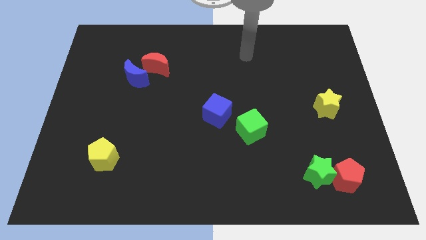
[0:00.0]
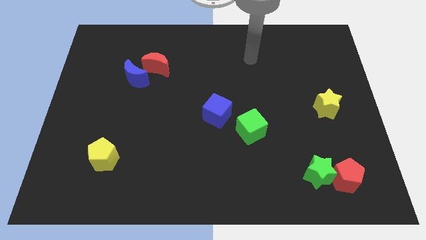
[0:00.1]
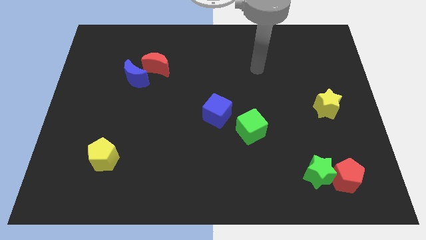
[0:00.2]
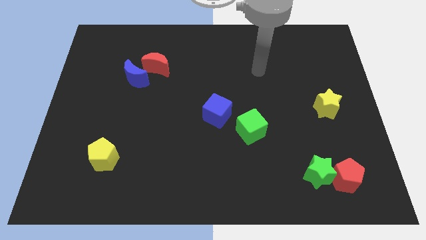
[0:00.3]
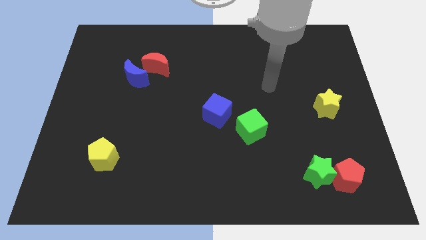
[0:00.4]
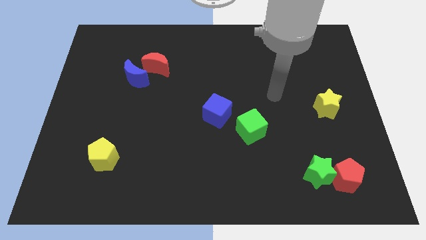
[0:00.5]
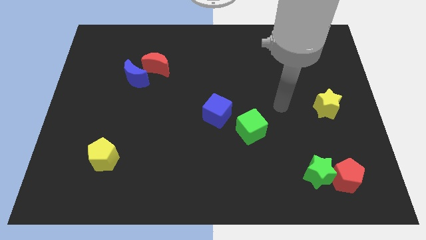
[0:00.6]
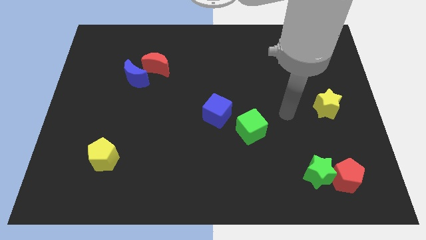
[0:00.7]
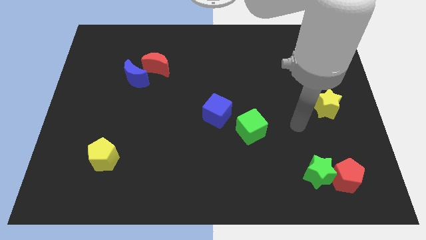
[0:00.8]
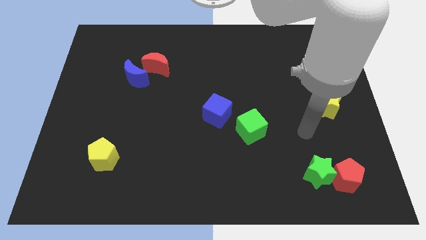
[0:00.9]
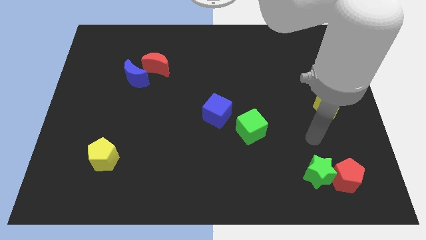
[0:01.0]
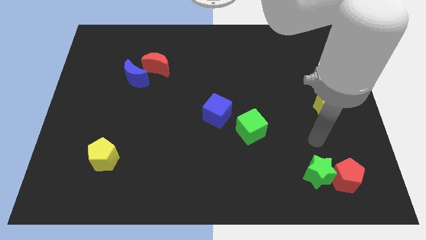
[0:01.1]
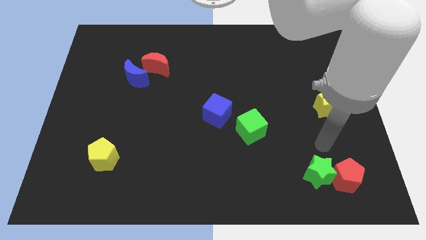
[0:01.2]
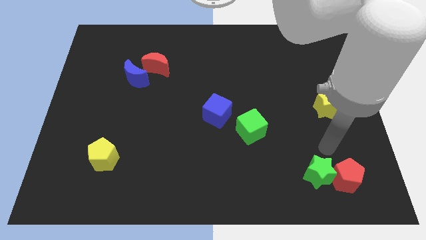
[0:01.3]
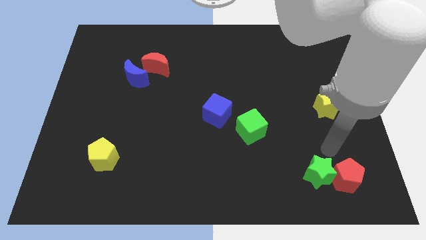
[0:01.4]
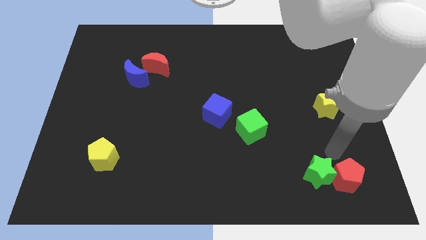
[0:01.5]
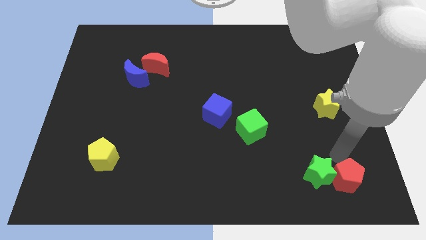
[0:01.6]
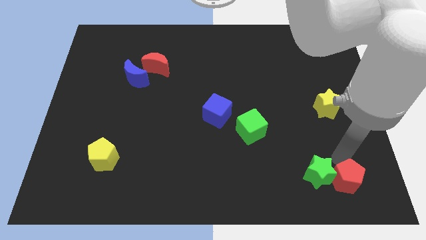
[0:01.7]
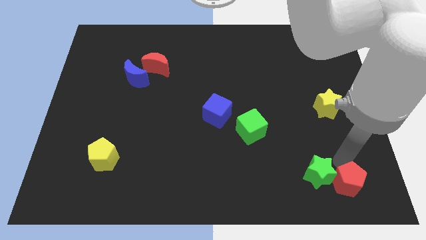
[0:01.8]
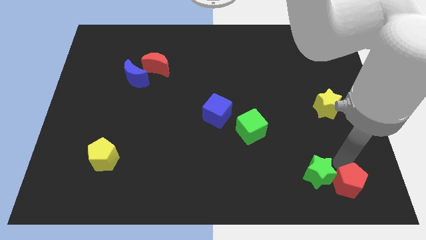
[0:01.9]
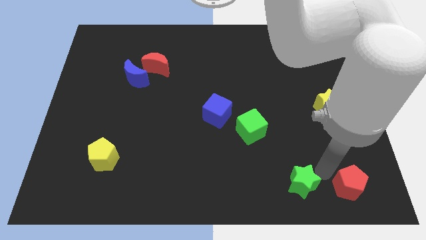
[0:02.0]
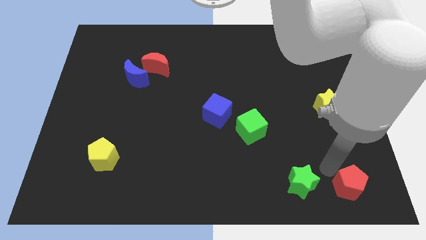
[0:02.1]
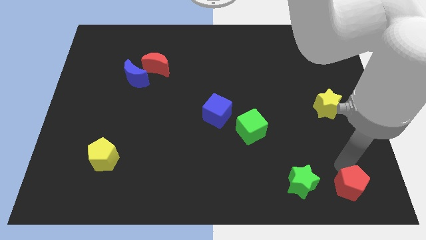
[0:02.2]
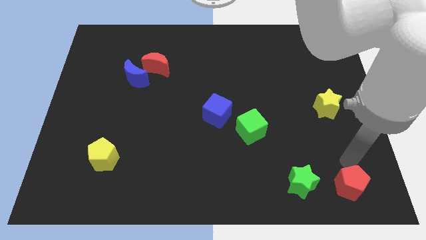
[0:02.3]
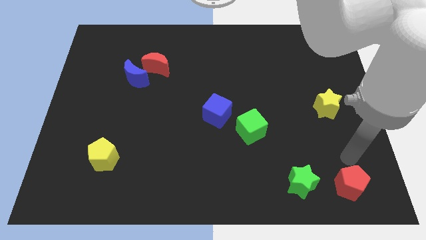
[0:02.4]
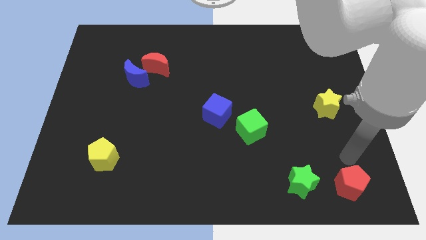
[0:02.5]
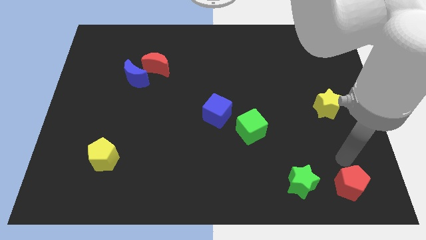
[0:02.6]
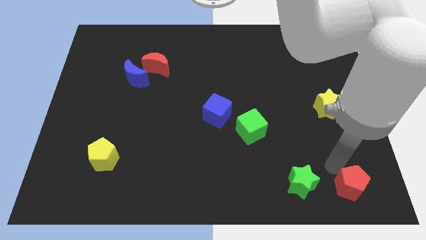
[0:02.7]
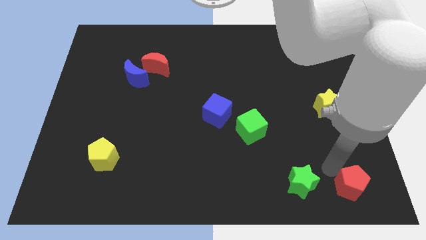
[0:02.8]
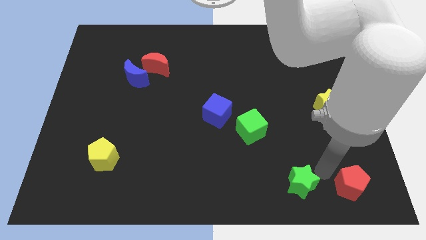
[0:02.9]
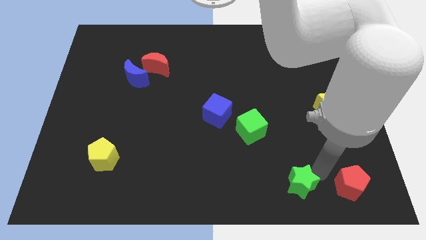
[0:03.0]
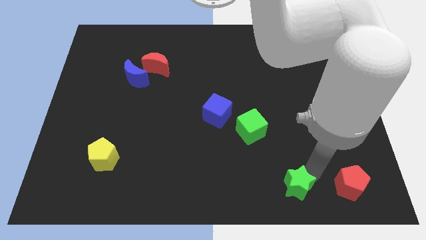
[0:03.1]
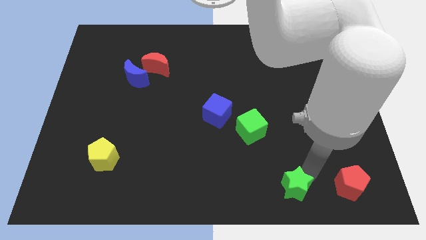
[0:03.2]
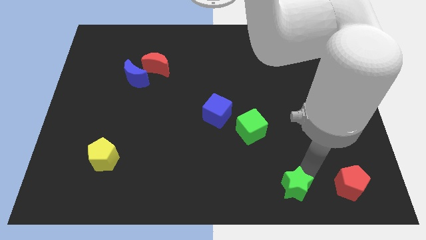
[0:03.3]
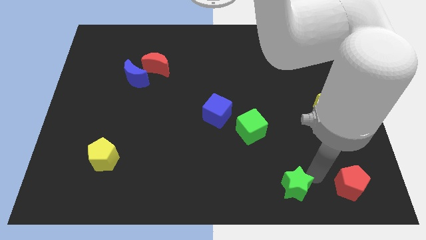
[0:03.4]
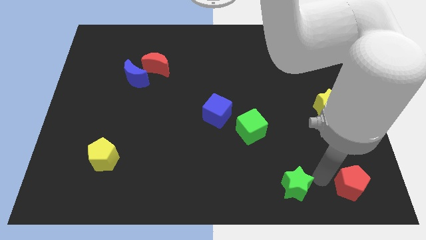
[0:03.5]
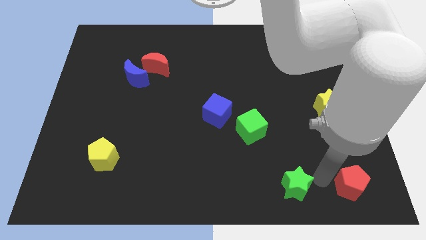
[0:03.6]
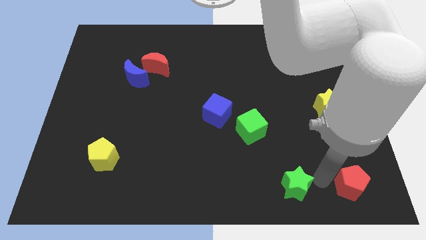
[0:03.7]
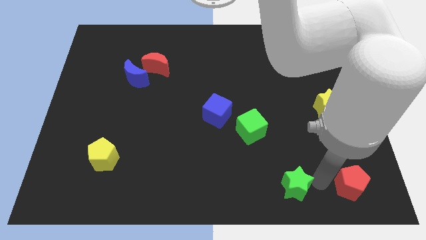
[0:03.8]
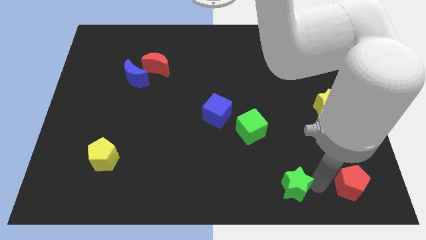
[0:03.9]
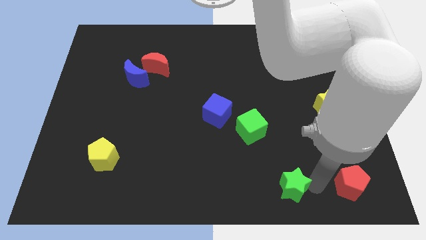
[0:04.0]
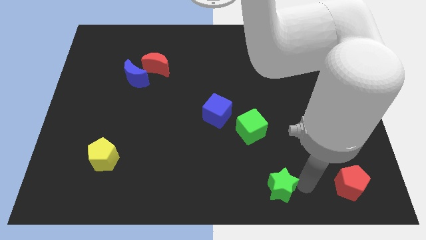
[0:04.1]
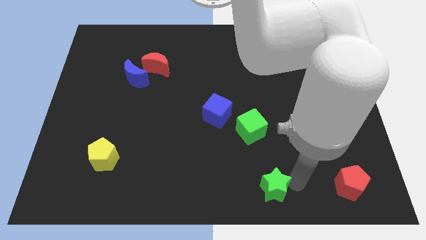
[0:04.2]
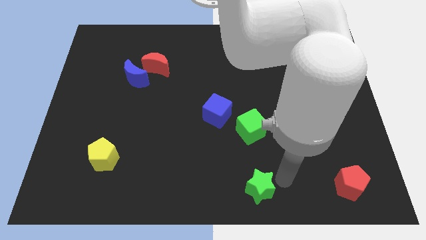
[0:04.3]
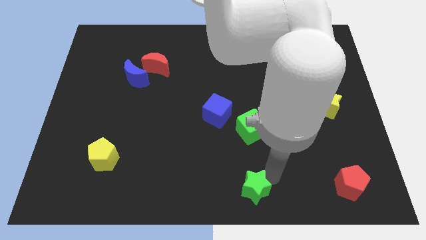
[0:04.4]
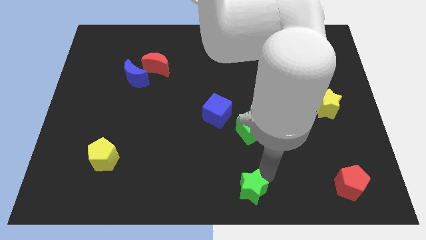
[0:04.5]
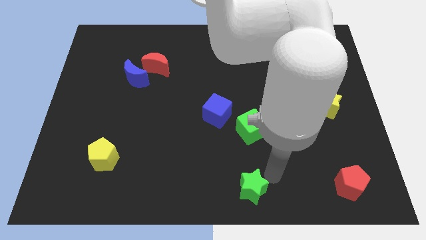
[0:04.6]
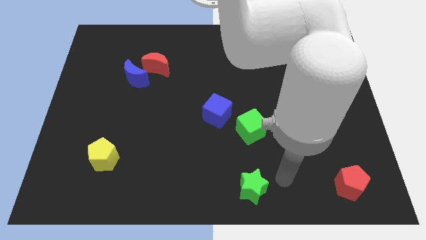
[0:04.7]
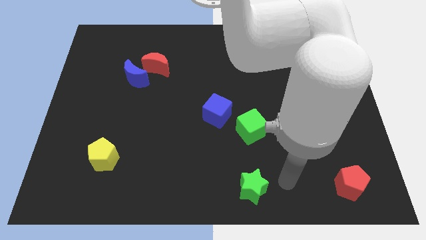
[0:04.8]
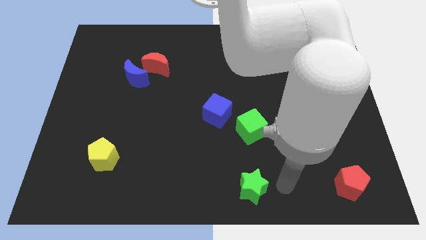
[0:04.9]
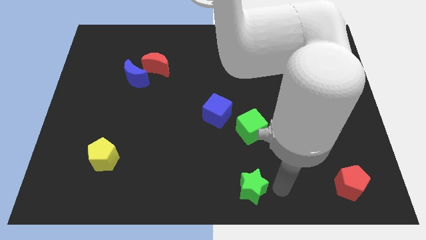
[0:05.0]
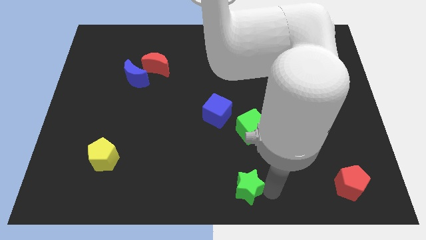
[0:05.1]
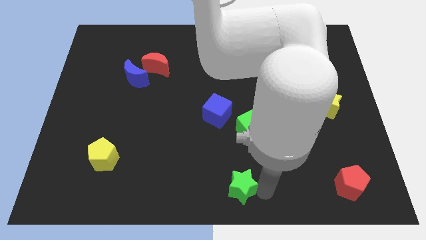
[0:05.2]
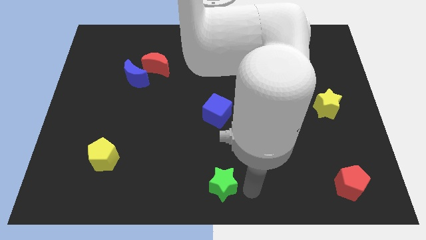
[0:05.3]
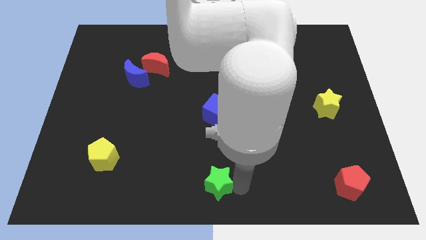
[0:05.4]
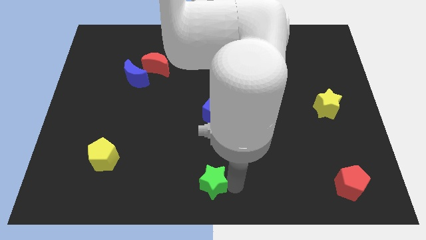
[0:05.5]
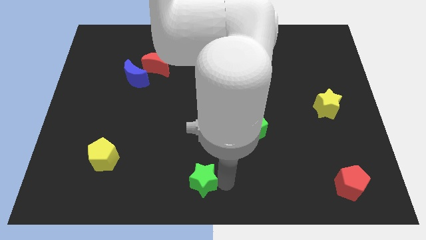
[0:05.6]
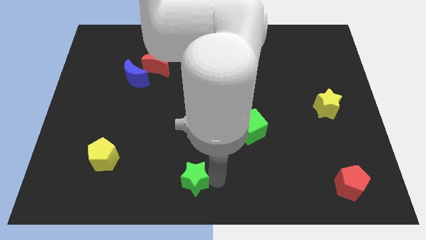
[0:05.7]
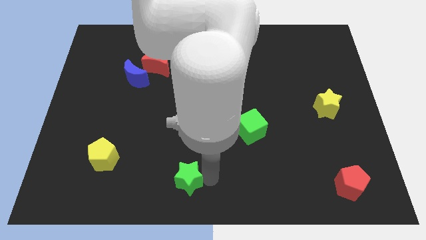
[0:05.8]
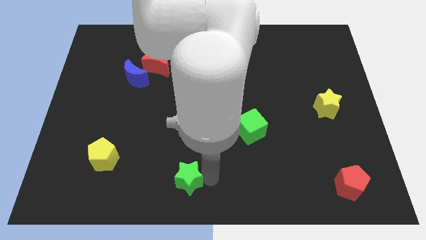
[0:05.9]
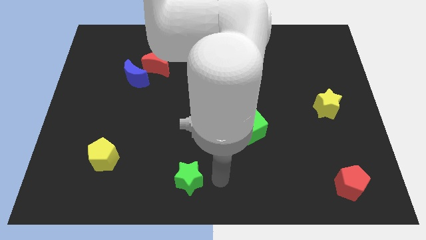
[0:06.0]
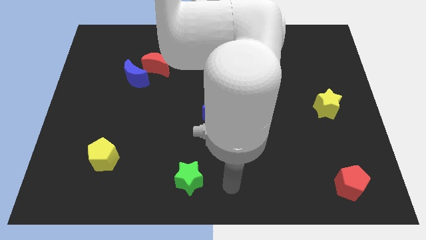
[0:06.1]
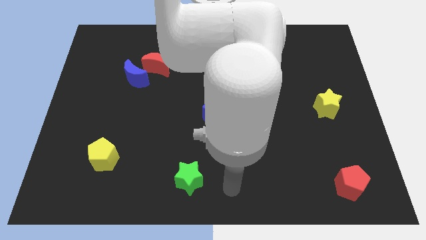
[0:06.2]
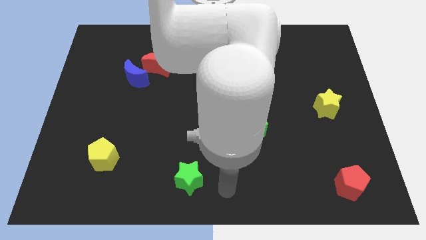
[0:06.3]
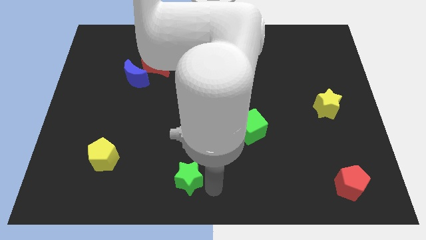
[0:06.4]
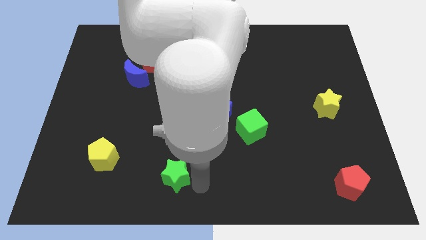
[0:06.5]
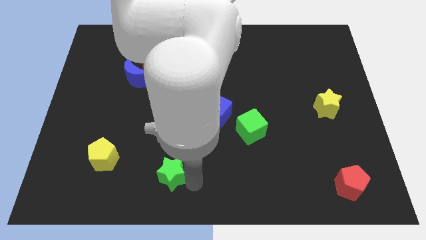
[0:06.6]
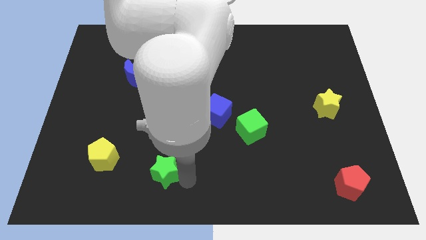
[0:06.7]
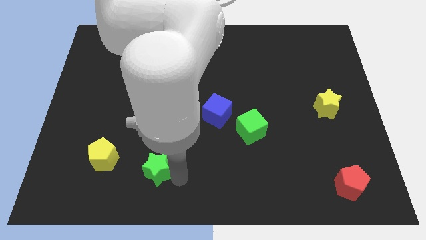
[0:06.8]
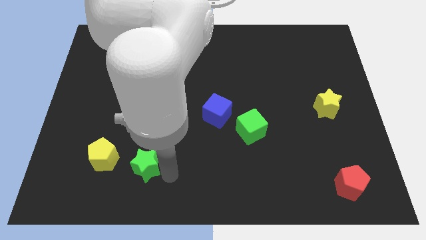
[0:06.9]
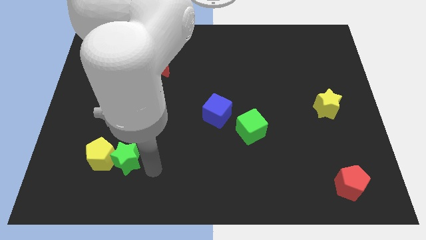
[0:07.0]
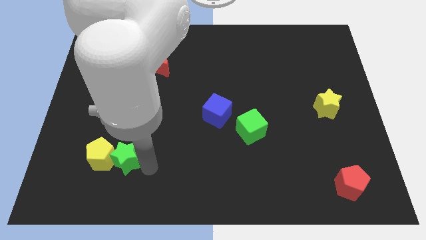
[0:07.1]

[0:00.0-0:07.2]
move the green star next to the yellow pentagon

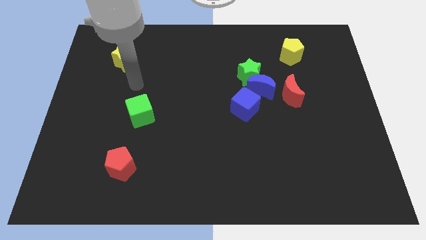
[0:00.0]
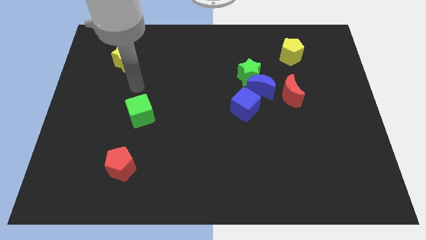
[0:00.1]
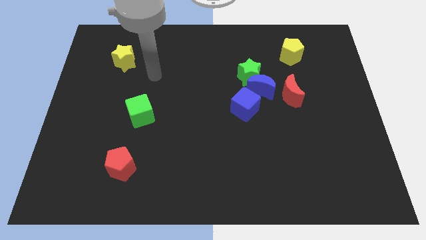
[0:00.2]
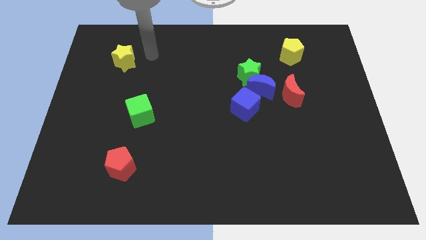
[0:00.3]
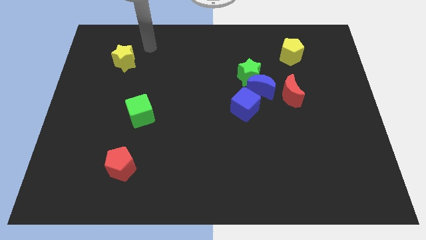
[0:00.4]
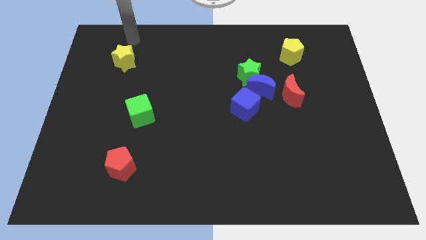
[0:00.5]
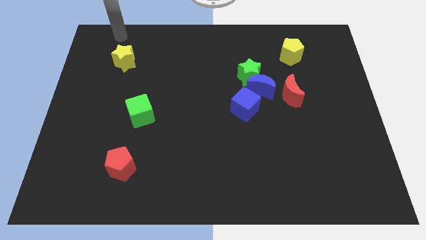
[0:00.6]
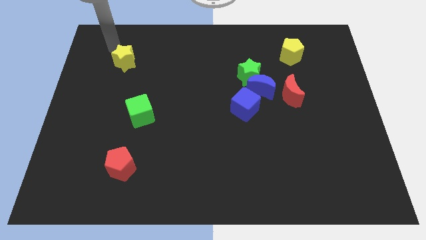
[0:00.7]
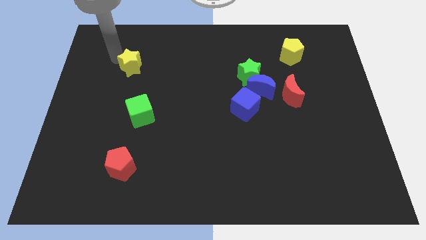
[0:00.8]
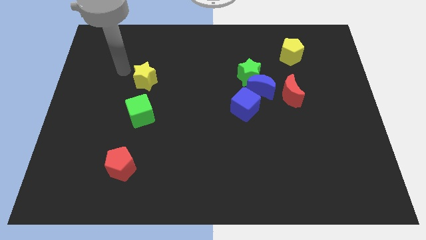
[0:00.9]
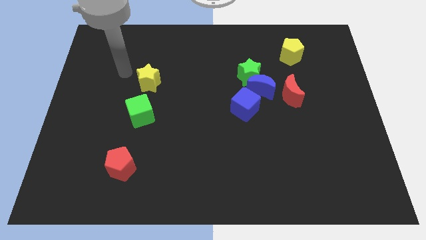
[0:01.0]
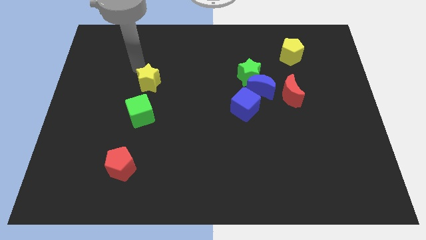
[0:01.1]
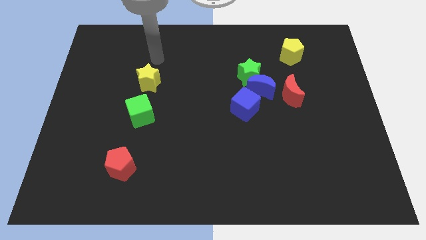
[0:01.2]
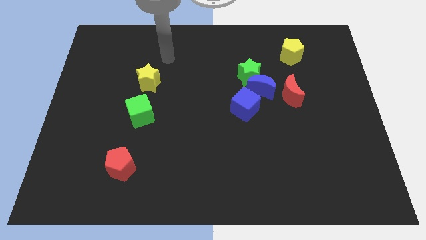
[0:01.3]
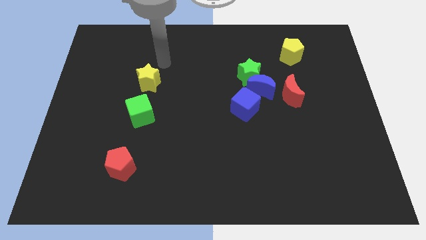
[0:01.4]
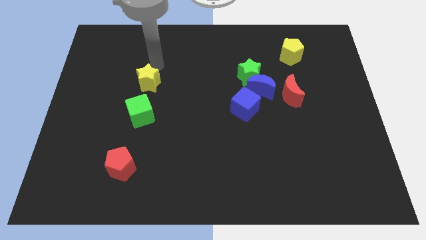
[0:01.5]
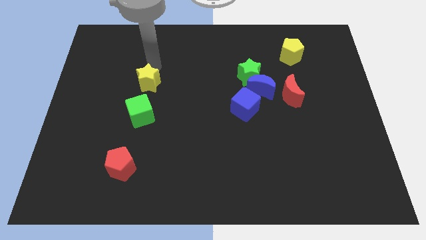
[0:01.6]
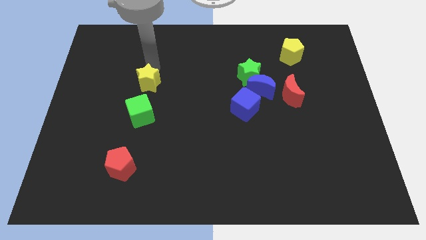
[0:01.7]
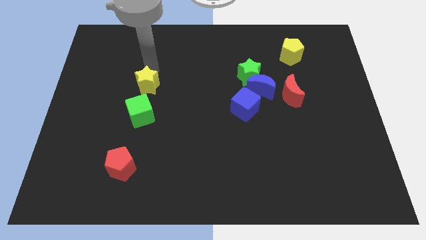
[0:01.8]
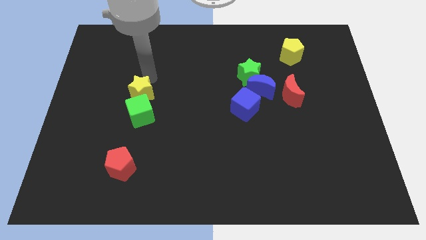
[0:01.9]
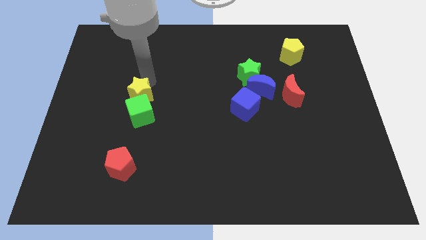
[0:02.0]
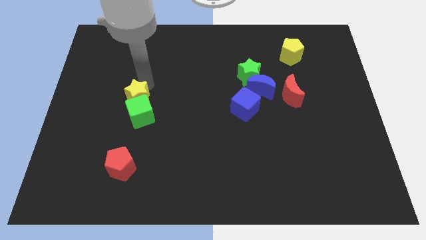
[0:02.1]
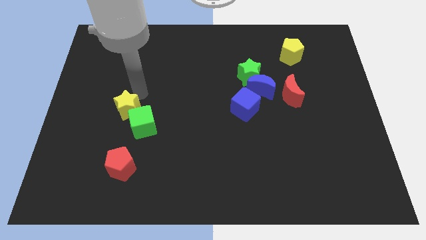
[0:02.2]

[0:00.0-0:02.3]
put the yellow star towards the green cube
